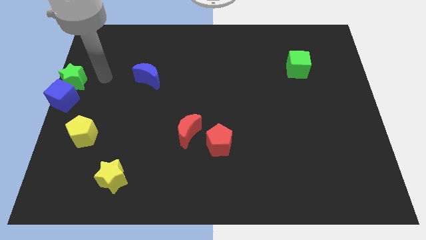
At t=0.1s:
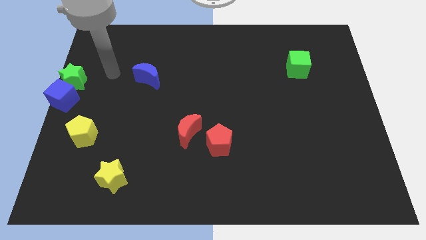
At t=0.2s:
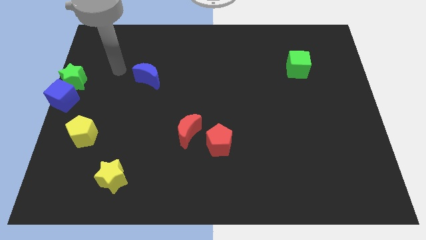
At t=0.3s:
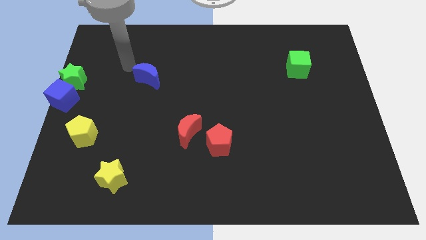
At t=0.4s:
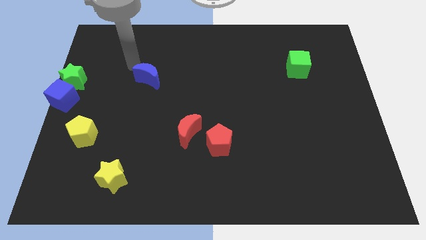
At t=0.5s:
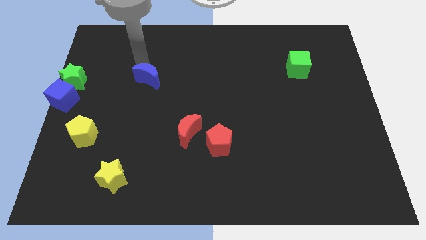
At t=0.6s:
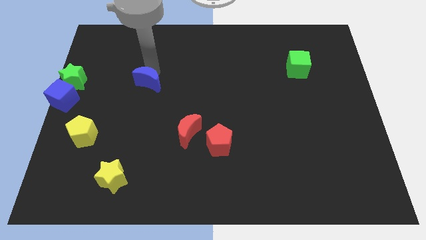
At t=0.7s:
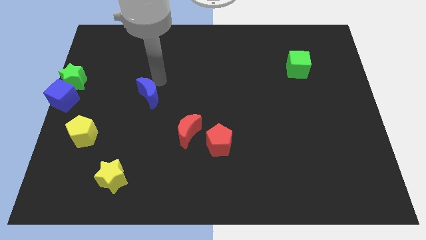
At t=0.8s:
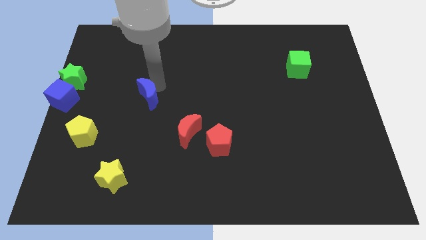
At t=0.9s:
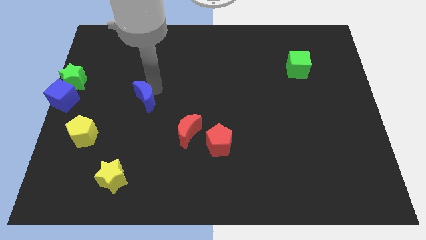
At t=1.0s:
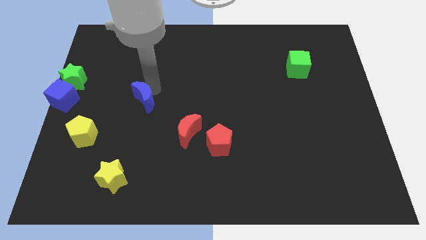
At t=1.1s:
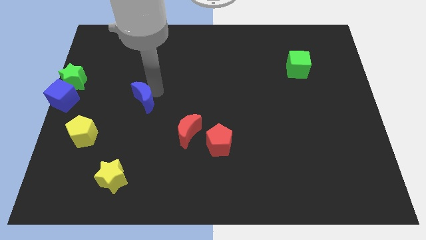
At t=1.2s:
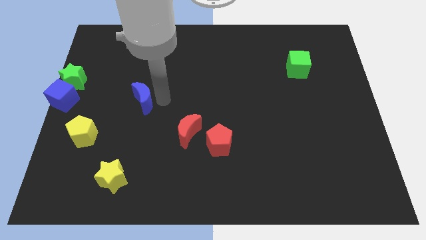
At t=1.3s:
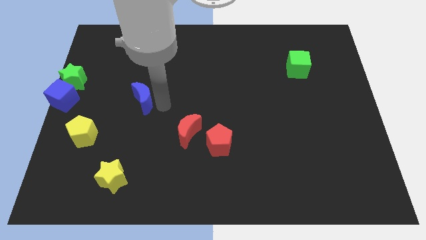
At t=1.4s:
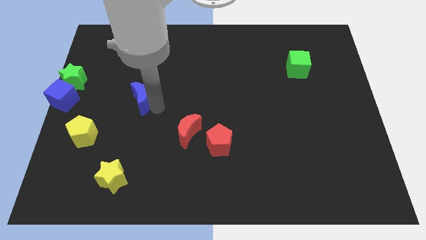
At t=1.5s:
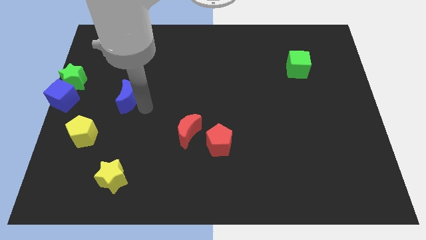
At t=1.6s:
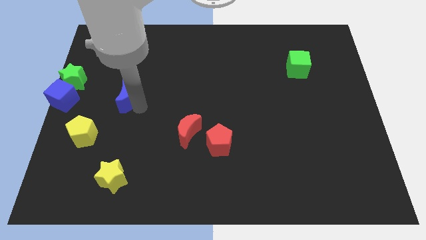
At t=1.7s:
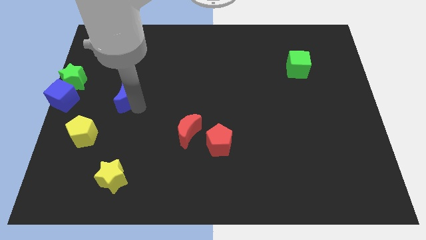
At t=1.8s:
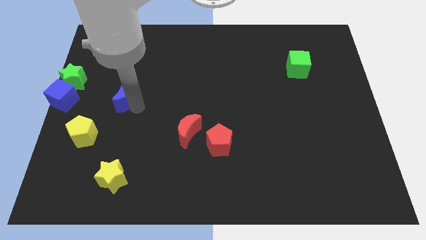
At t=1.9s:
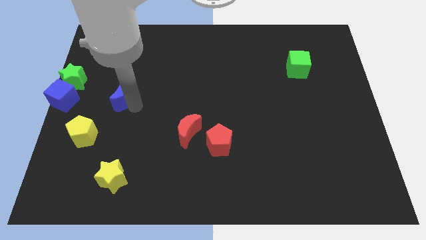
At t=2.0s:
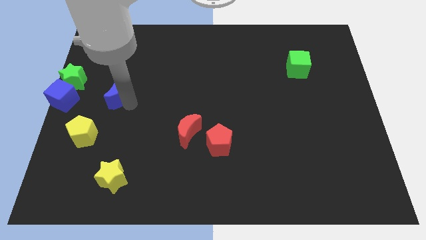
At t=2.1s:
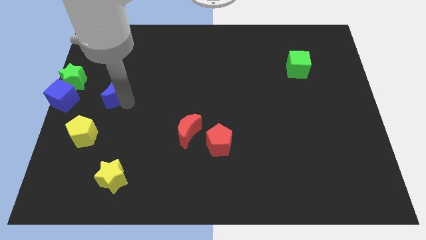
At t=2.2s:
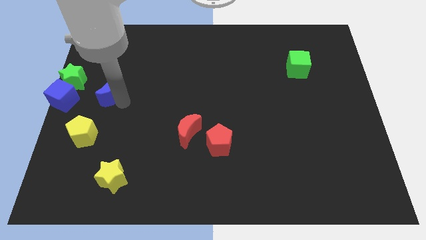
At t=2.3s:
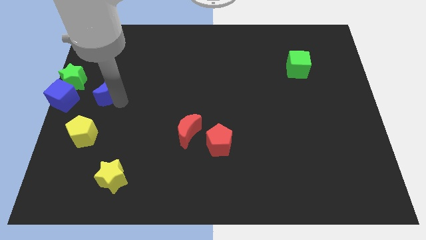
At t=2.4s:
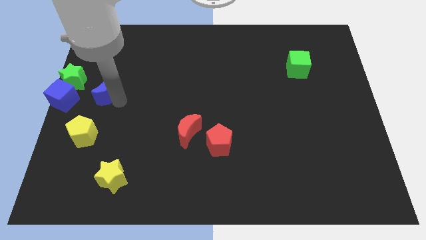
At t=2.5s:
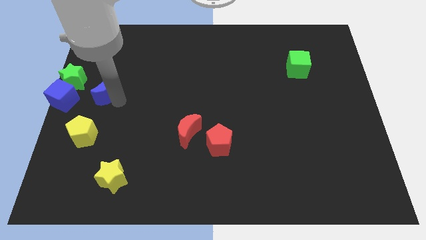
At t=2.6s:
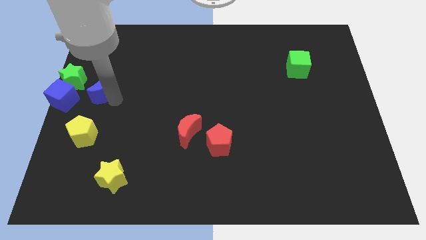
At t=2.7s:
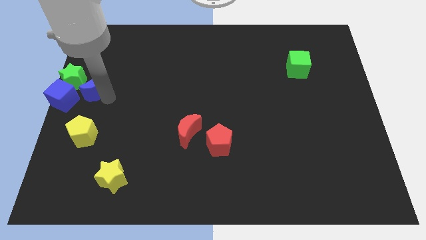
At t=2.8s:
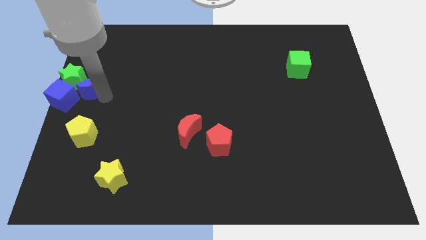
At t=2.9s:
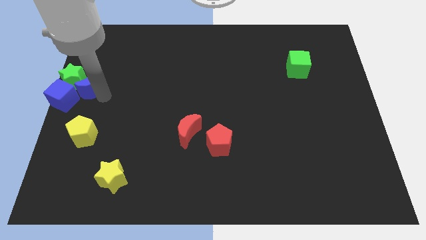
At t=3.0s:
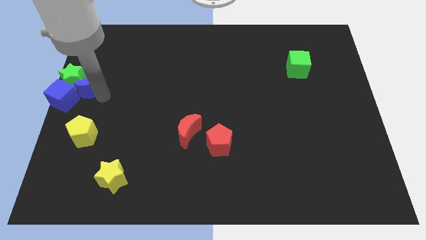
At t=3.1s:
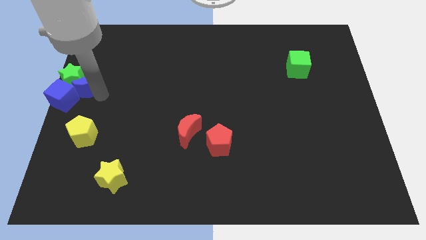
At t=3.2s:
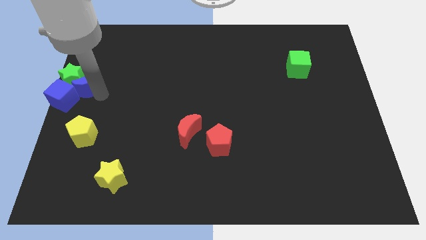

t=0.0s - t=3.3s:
push the blue crescent close to the green star

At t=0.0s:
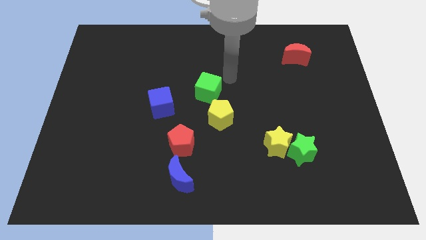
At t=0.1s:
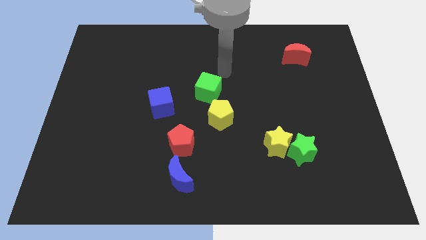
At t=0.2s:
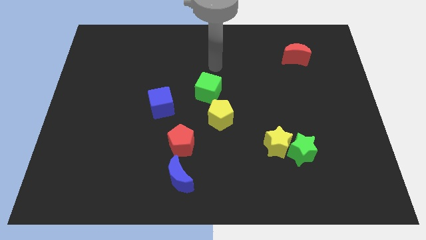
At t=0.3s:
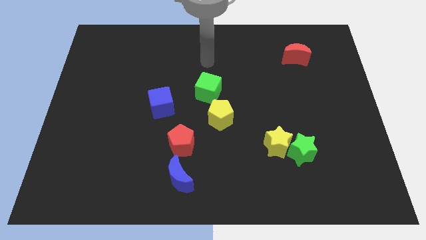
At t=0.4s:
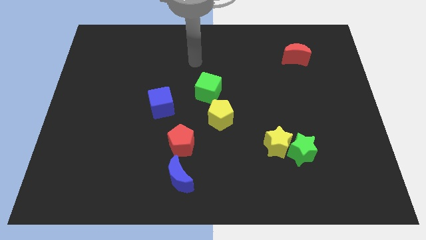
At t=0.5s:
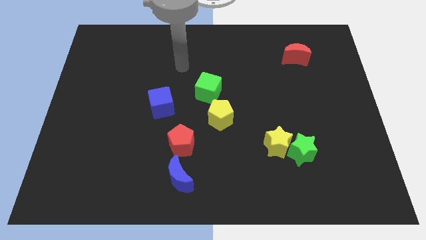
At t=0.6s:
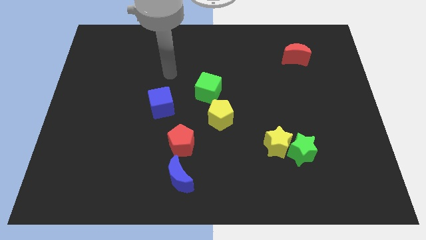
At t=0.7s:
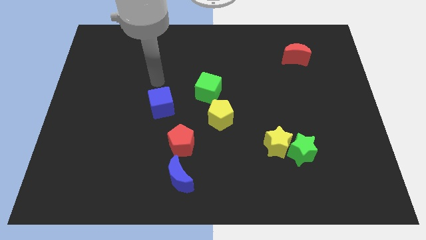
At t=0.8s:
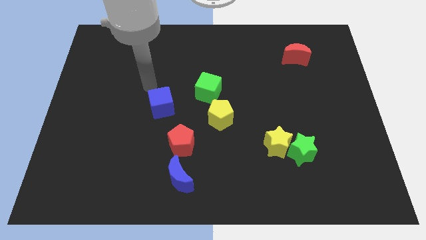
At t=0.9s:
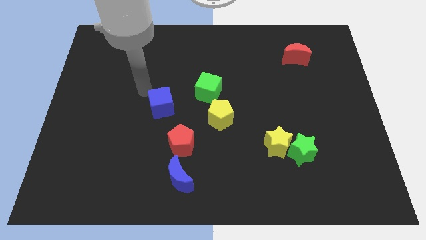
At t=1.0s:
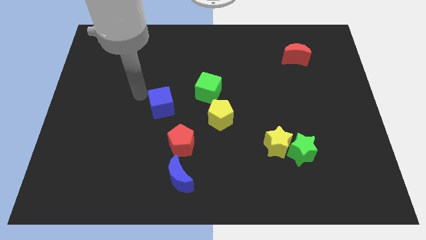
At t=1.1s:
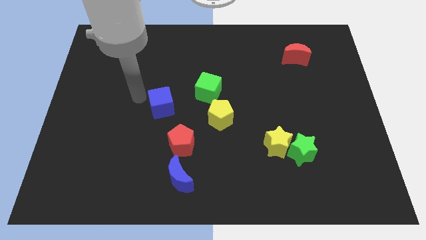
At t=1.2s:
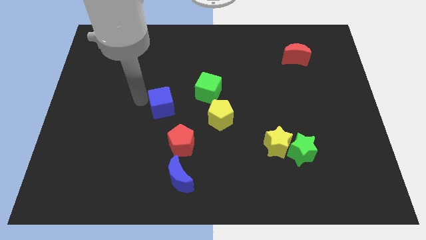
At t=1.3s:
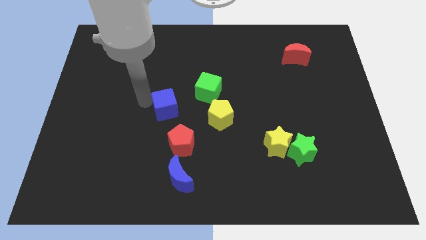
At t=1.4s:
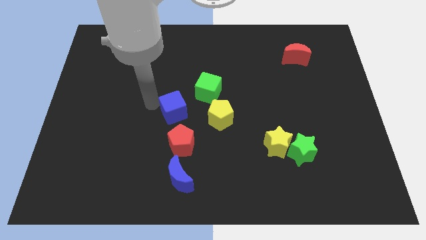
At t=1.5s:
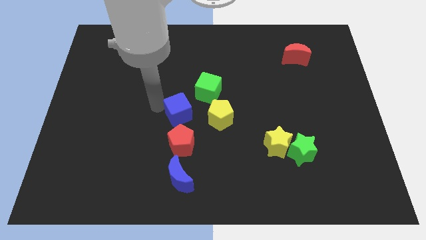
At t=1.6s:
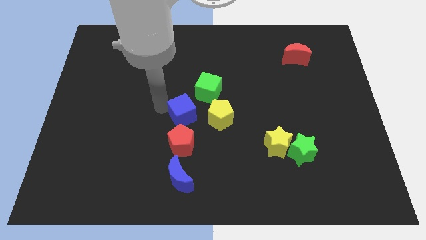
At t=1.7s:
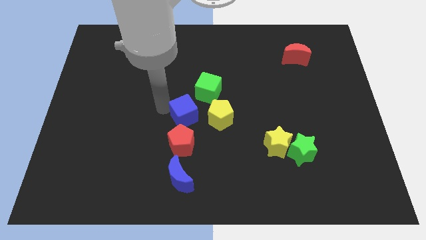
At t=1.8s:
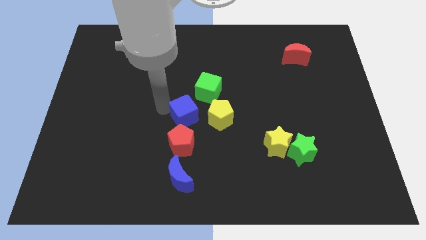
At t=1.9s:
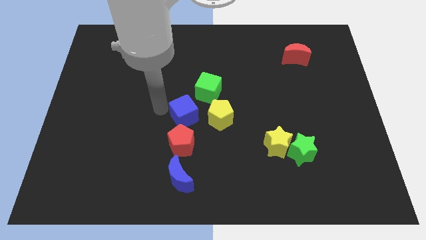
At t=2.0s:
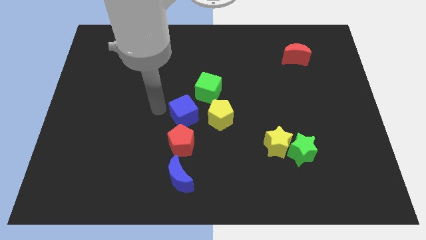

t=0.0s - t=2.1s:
move the blue cube close to the yellow pentagon

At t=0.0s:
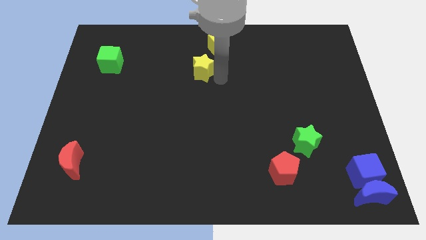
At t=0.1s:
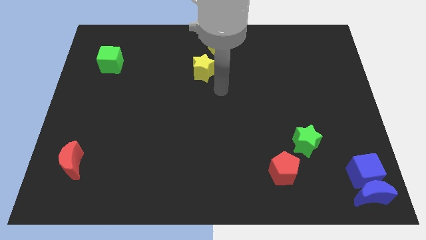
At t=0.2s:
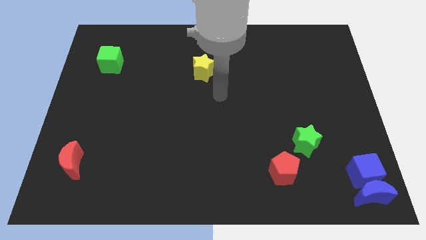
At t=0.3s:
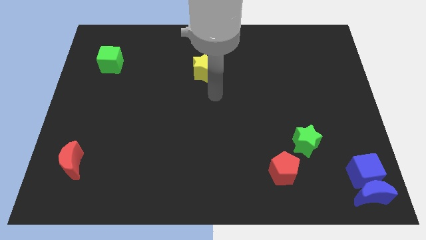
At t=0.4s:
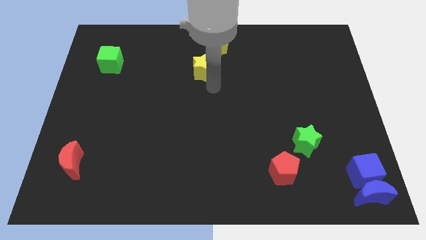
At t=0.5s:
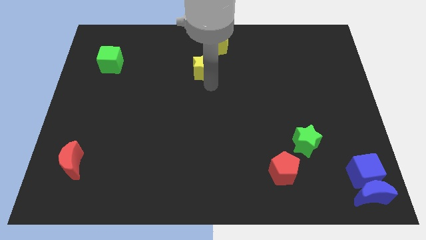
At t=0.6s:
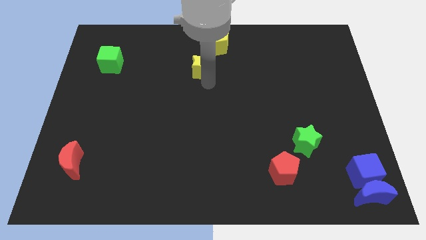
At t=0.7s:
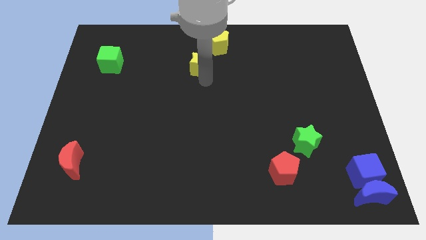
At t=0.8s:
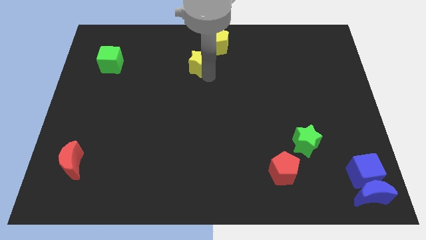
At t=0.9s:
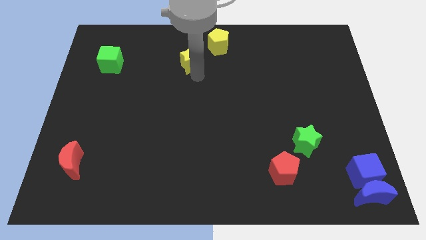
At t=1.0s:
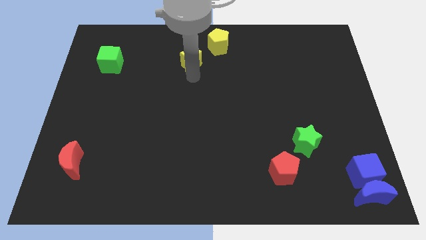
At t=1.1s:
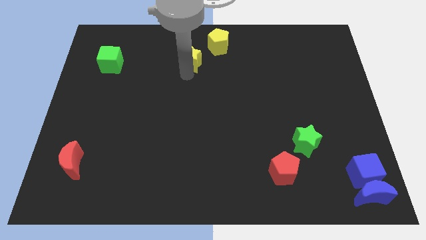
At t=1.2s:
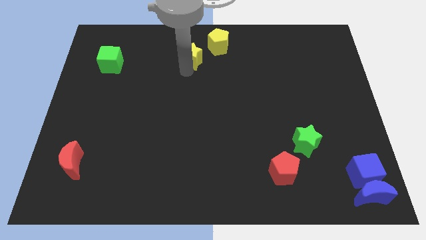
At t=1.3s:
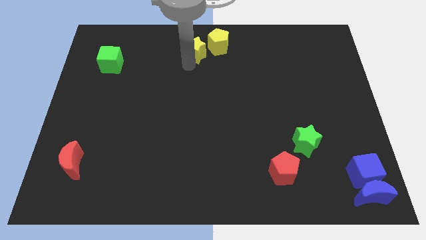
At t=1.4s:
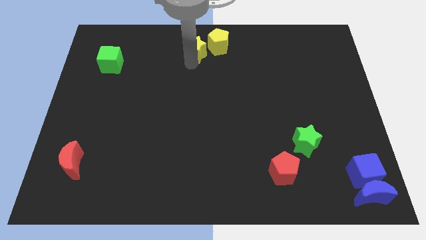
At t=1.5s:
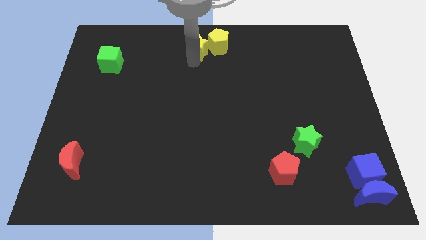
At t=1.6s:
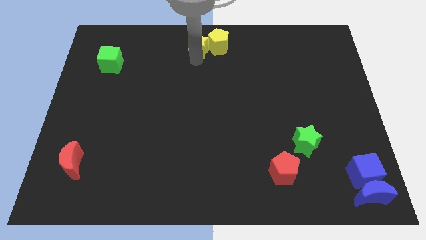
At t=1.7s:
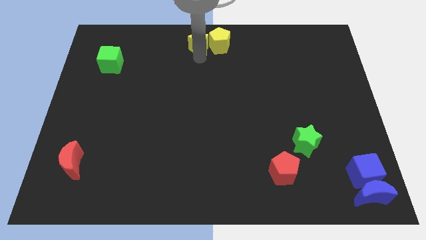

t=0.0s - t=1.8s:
push yellow star beside yellow pentagon

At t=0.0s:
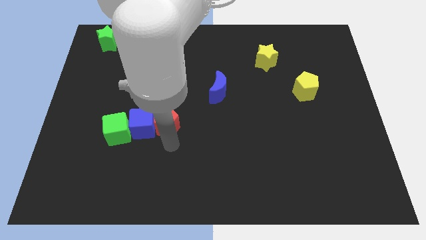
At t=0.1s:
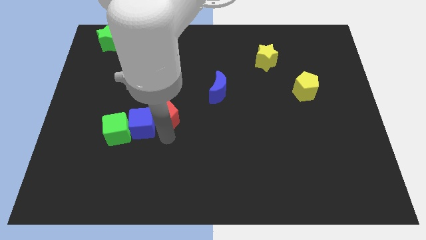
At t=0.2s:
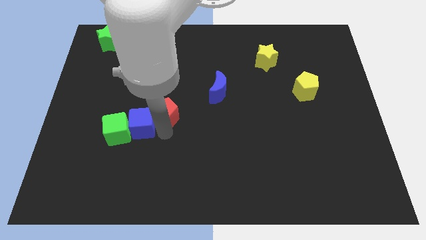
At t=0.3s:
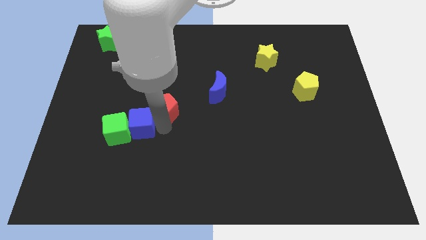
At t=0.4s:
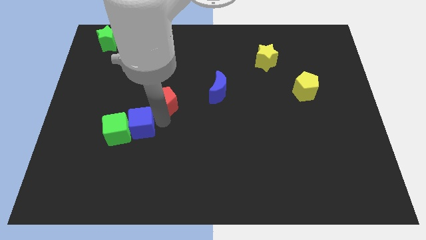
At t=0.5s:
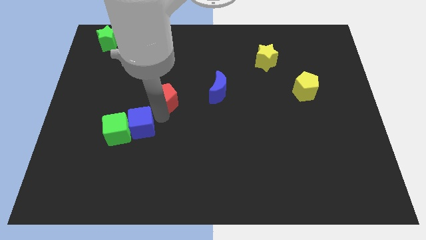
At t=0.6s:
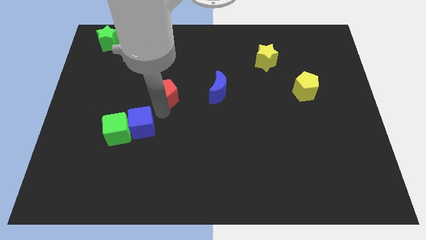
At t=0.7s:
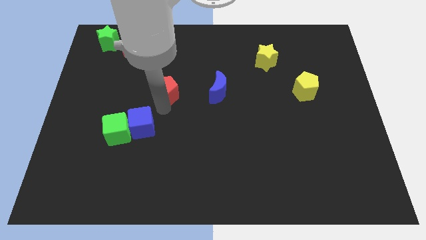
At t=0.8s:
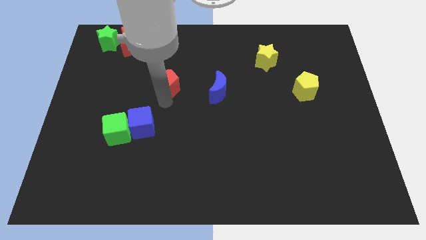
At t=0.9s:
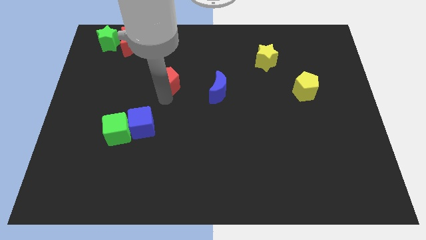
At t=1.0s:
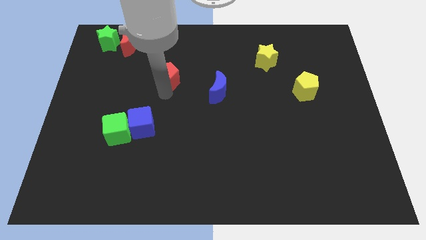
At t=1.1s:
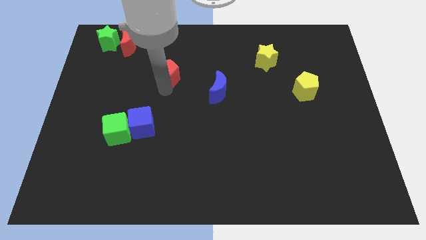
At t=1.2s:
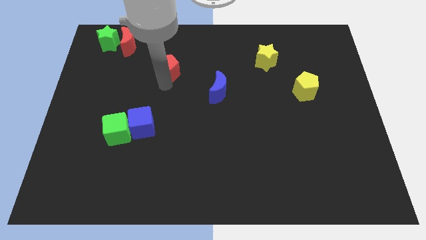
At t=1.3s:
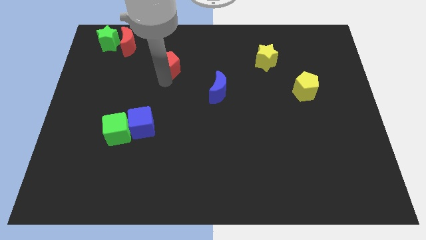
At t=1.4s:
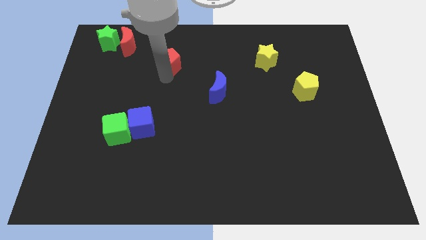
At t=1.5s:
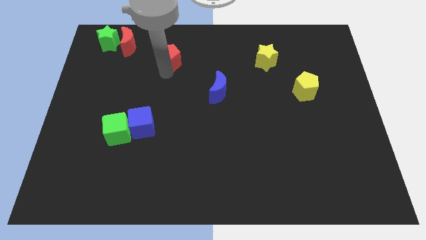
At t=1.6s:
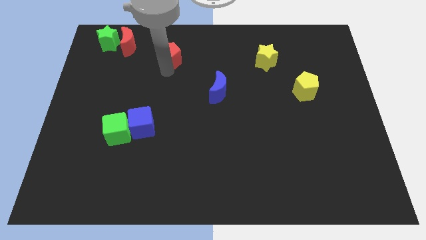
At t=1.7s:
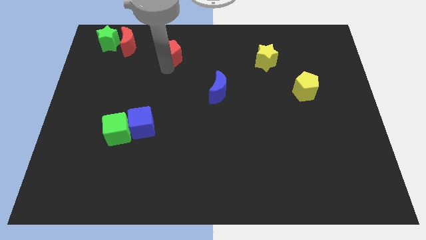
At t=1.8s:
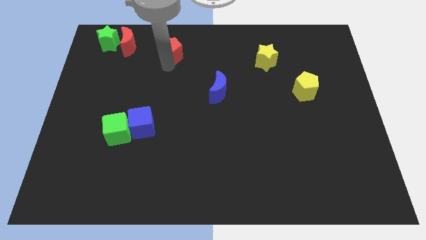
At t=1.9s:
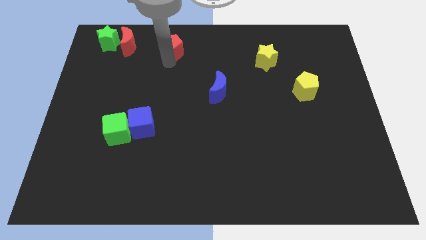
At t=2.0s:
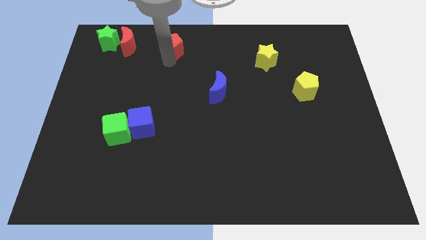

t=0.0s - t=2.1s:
separate the red pentagon from the blue cube
